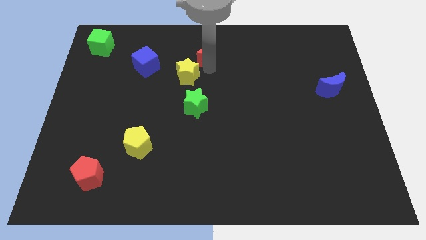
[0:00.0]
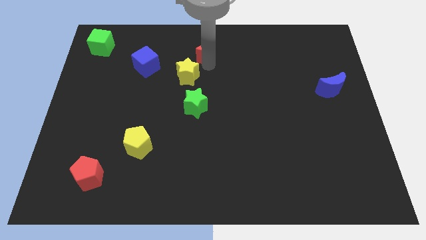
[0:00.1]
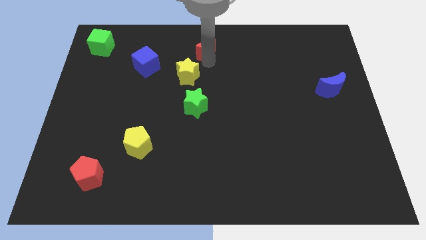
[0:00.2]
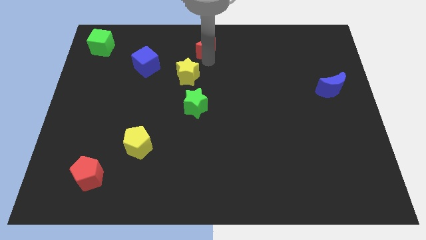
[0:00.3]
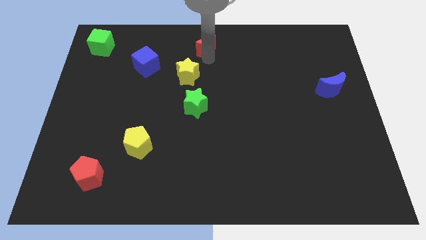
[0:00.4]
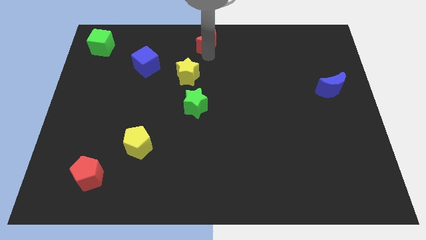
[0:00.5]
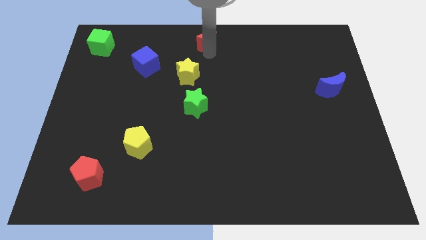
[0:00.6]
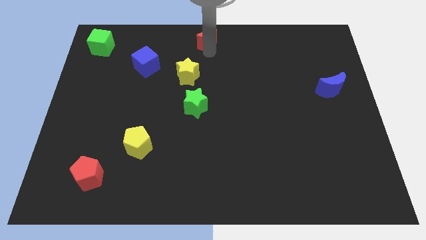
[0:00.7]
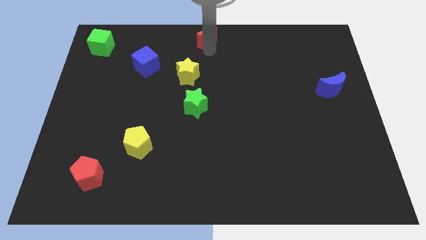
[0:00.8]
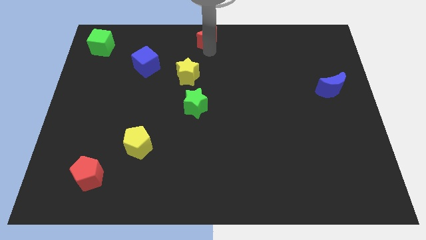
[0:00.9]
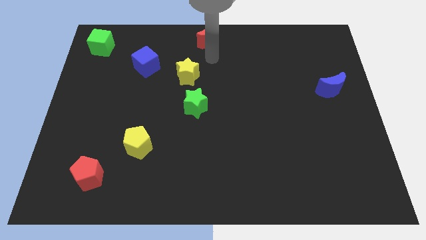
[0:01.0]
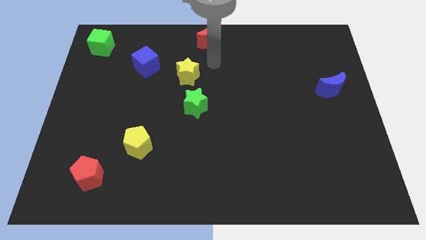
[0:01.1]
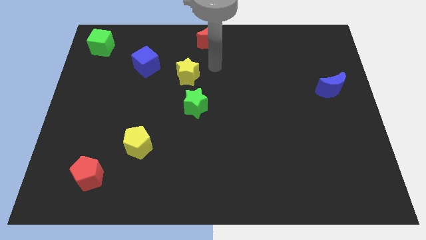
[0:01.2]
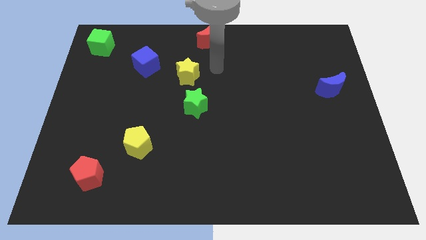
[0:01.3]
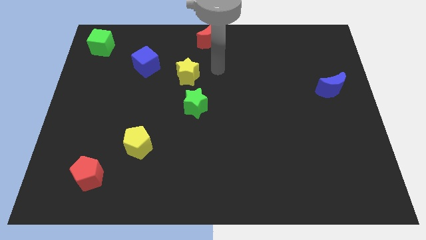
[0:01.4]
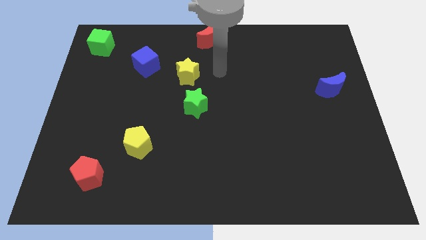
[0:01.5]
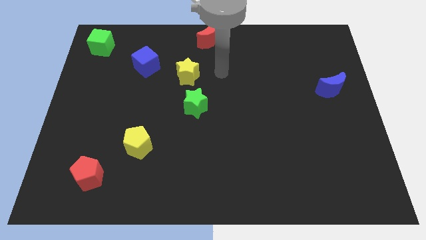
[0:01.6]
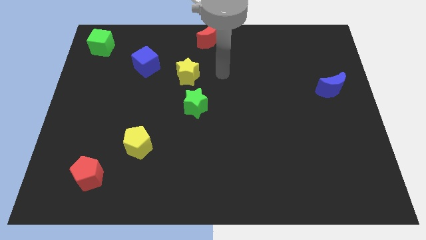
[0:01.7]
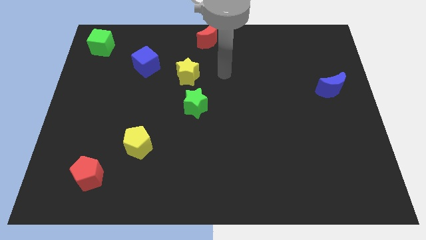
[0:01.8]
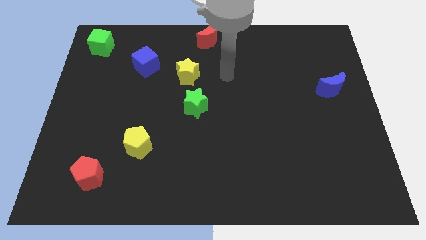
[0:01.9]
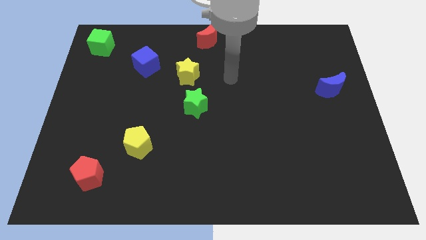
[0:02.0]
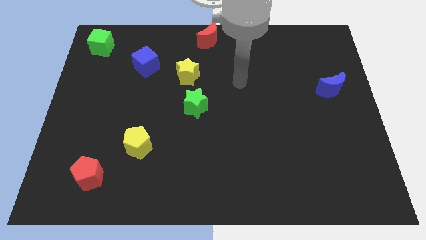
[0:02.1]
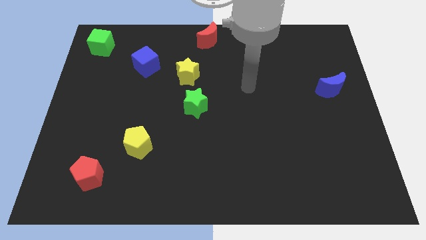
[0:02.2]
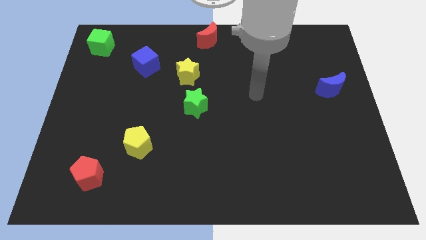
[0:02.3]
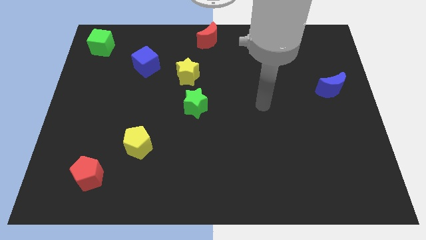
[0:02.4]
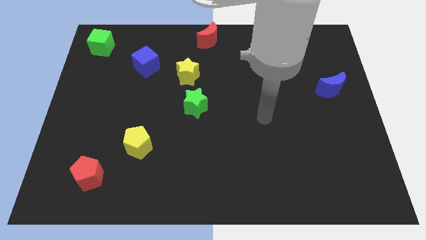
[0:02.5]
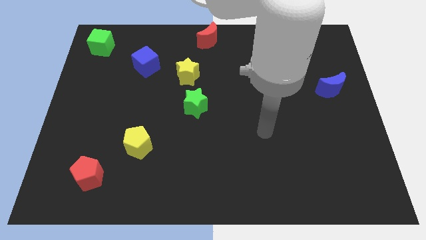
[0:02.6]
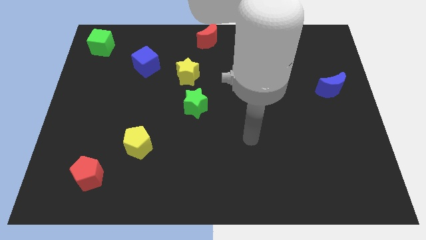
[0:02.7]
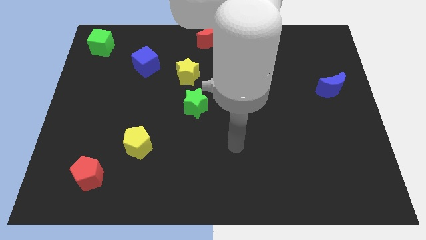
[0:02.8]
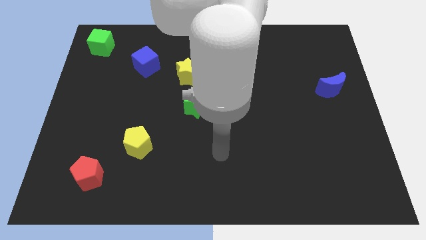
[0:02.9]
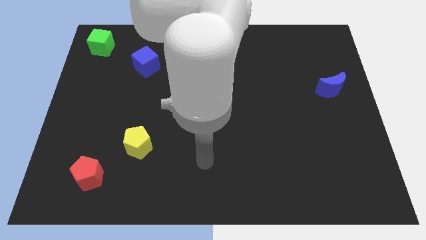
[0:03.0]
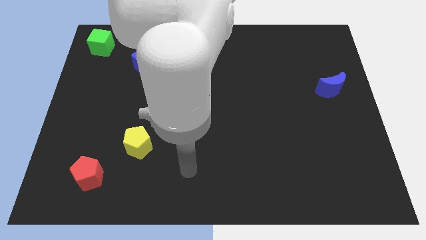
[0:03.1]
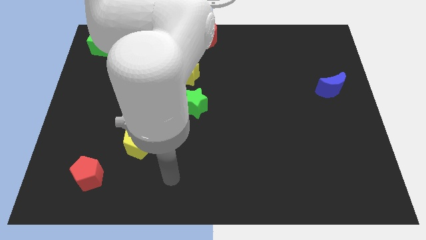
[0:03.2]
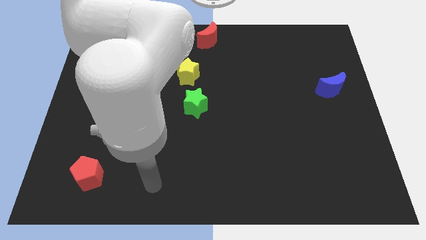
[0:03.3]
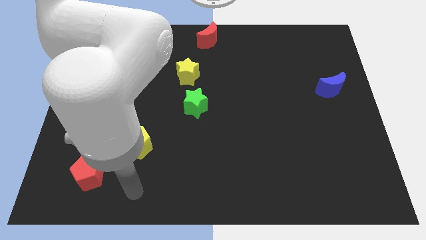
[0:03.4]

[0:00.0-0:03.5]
move the red moon to the top center of the board

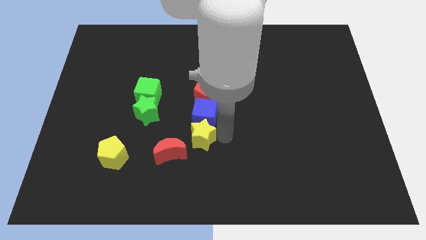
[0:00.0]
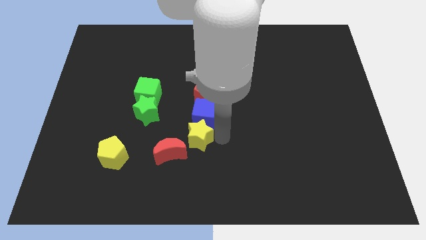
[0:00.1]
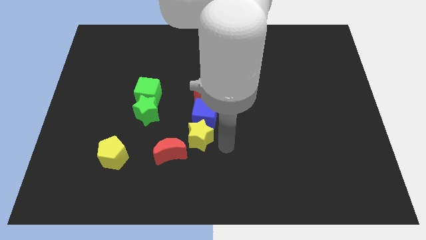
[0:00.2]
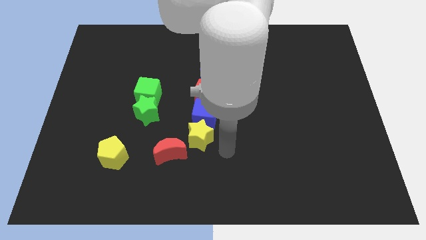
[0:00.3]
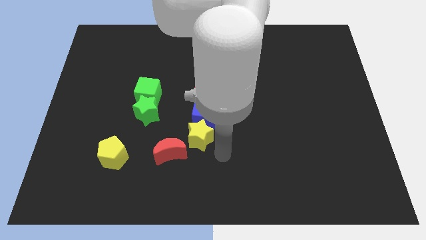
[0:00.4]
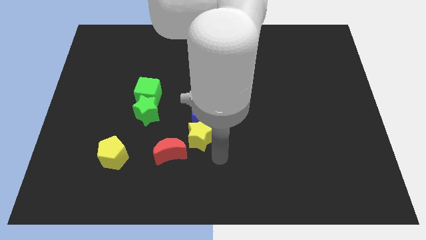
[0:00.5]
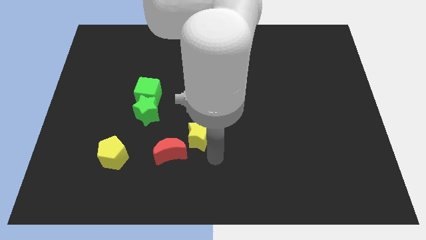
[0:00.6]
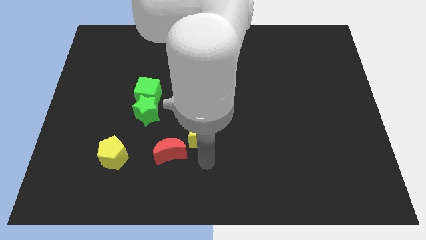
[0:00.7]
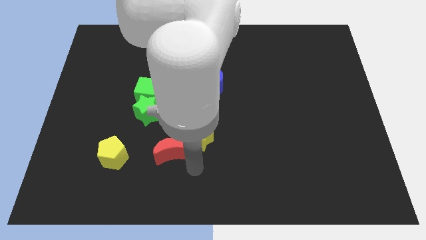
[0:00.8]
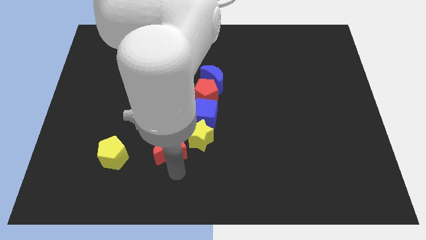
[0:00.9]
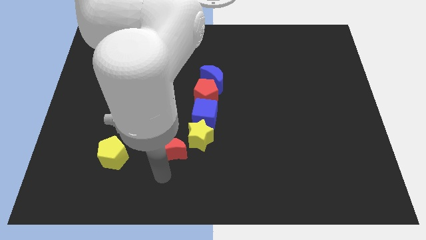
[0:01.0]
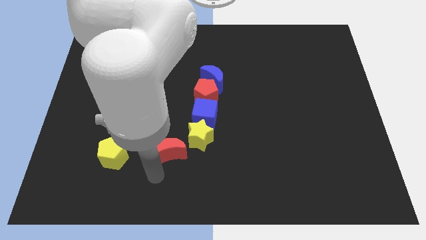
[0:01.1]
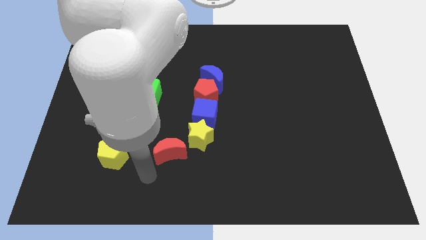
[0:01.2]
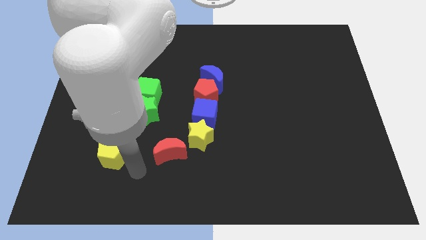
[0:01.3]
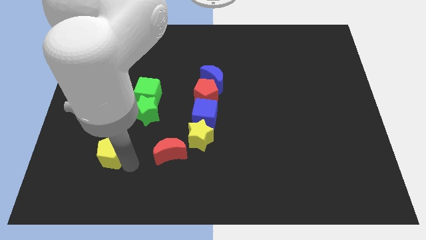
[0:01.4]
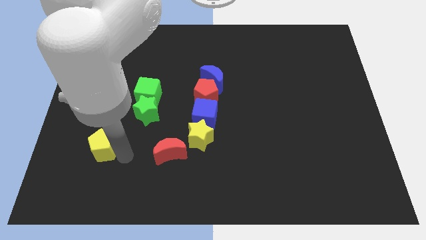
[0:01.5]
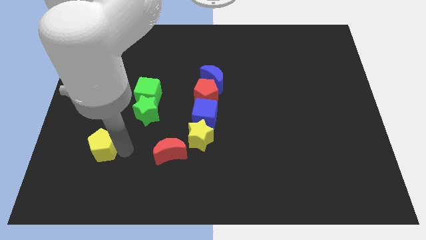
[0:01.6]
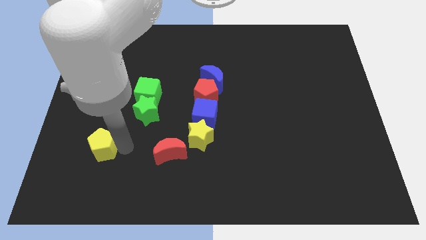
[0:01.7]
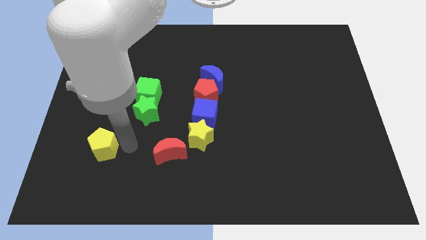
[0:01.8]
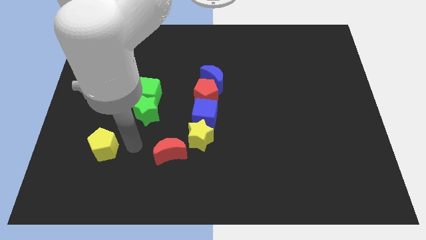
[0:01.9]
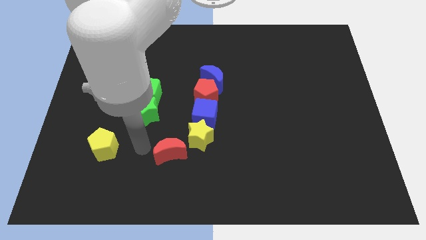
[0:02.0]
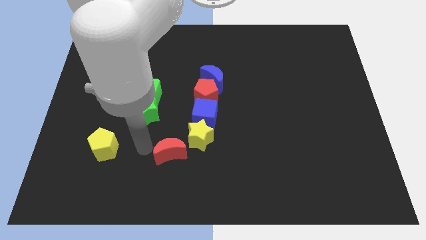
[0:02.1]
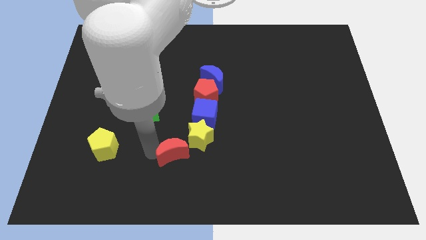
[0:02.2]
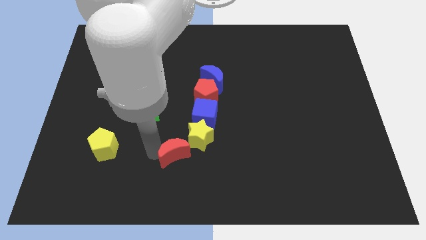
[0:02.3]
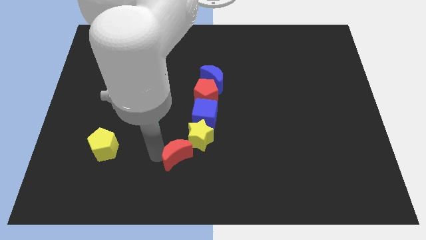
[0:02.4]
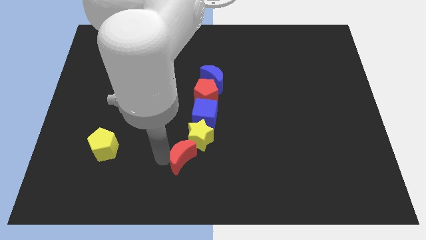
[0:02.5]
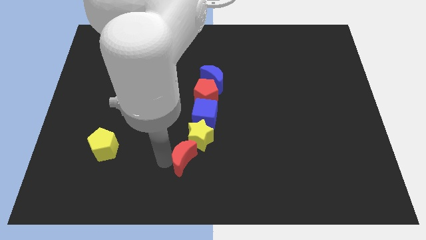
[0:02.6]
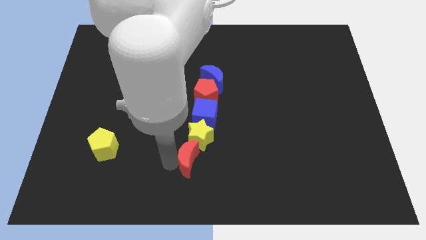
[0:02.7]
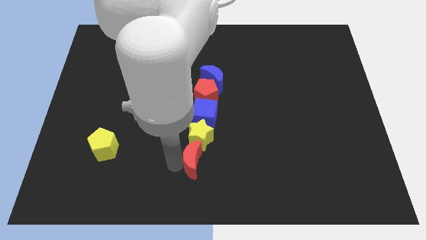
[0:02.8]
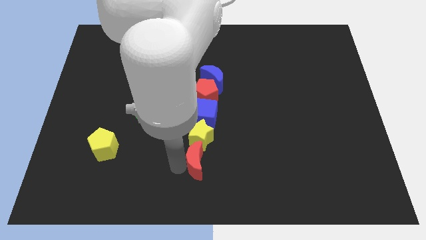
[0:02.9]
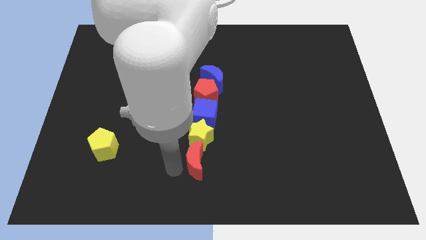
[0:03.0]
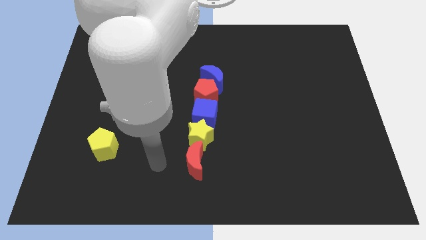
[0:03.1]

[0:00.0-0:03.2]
push the red moon towards the bottom center of the board

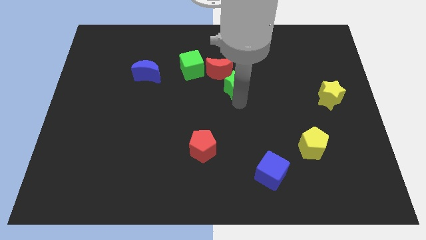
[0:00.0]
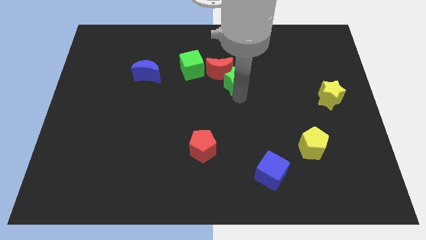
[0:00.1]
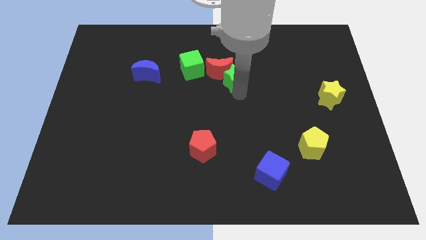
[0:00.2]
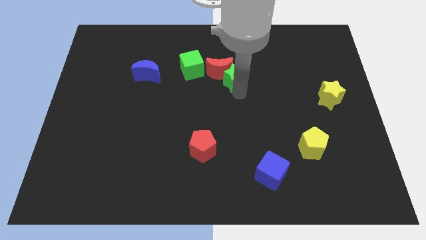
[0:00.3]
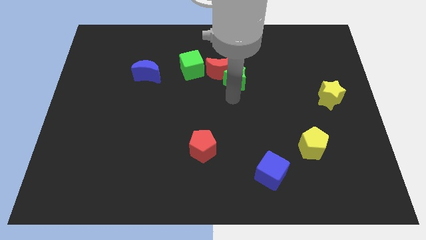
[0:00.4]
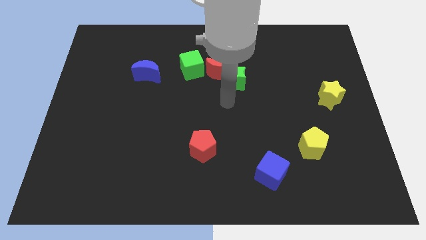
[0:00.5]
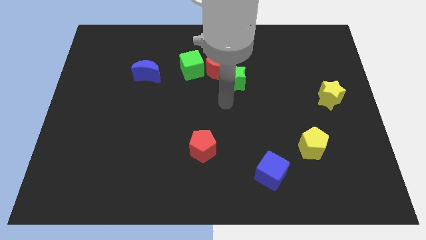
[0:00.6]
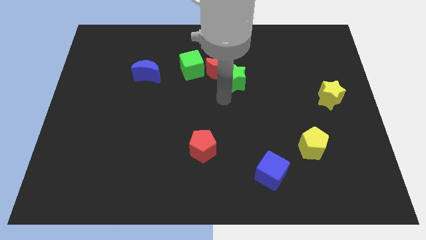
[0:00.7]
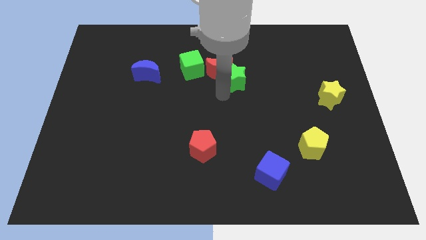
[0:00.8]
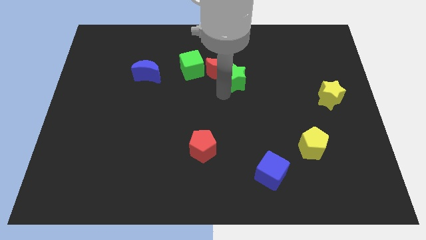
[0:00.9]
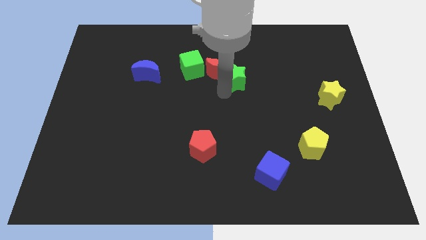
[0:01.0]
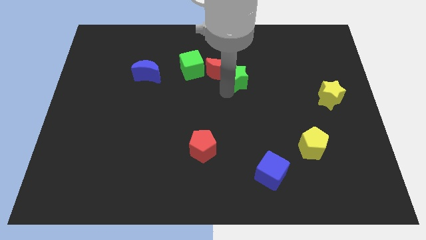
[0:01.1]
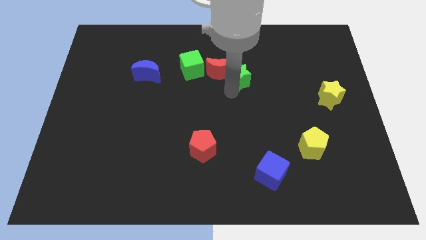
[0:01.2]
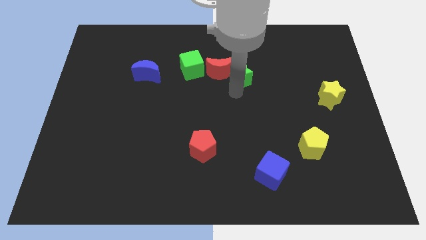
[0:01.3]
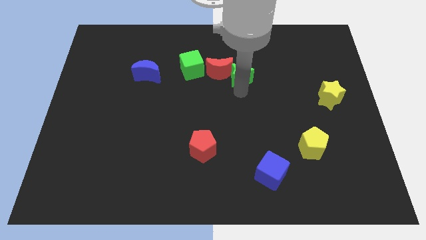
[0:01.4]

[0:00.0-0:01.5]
place the green star close to the red moon

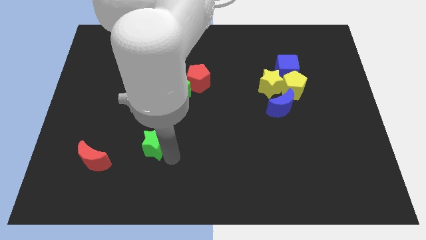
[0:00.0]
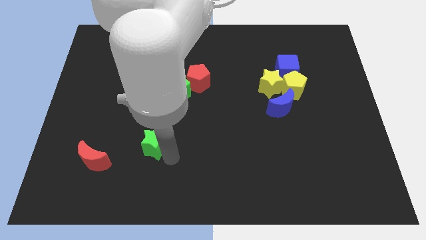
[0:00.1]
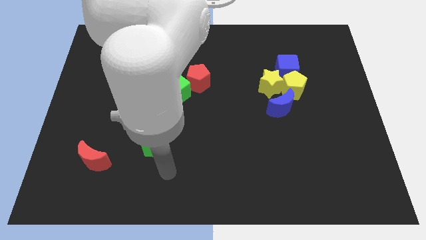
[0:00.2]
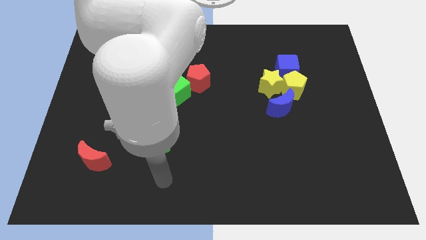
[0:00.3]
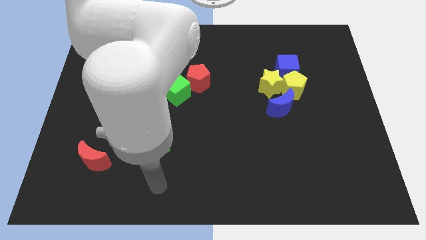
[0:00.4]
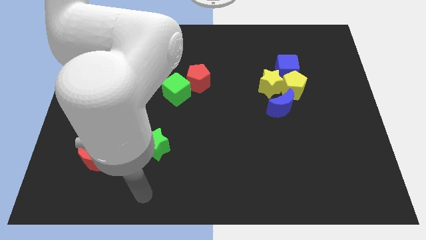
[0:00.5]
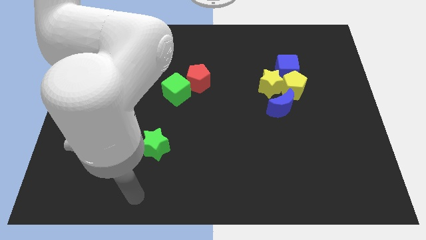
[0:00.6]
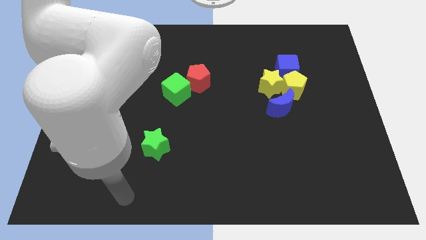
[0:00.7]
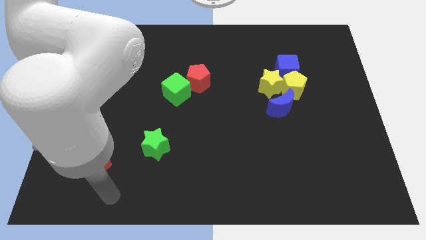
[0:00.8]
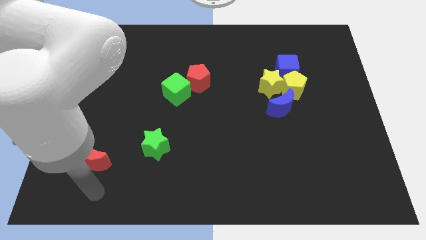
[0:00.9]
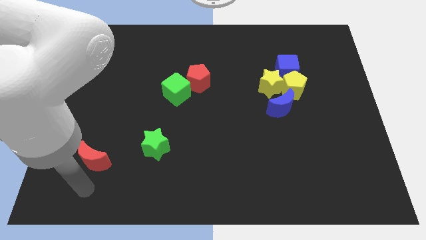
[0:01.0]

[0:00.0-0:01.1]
go and point your arm at the bottom side of the red moon
